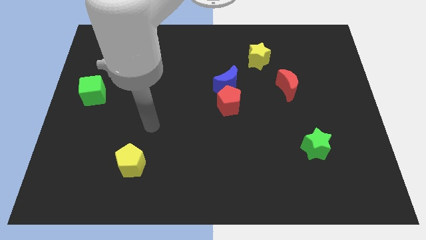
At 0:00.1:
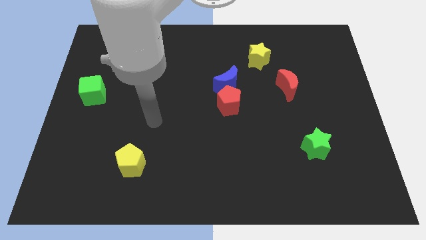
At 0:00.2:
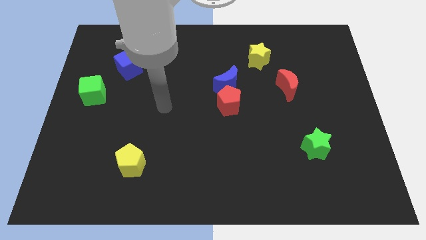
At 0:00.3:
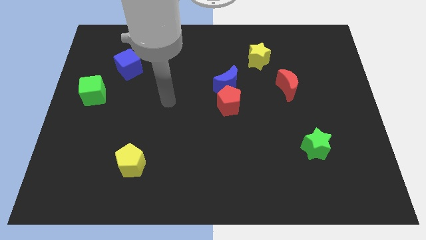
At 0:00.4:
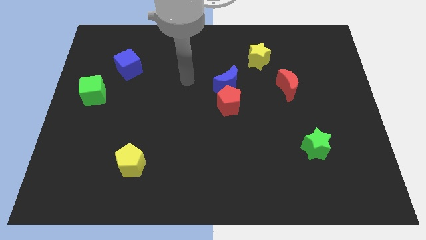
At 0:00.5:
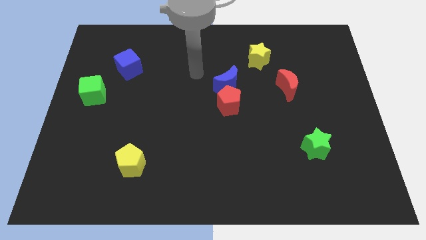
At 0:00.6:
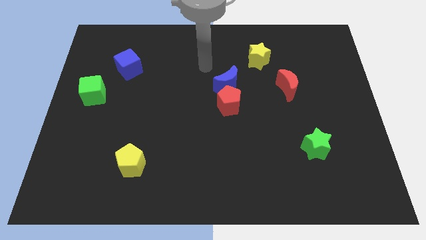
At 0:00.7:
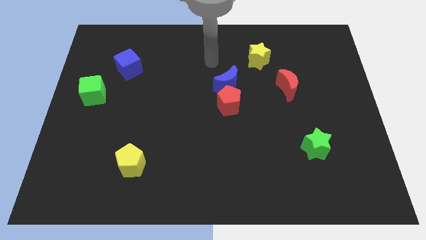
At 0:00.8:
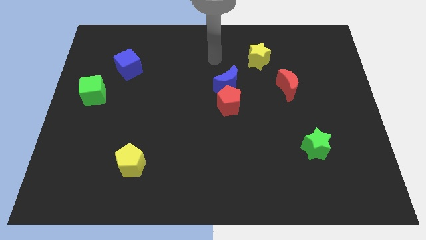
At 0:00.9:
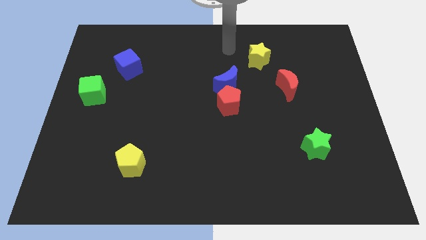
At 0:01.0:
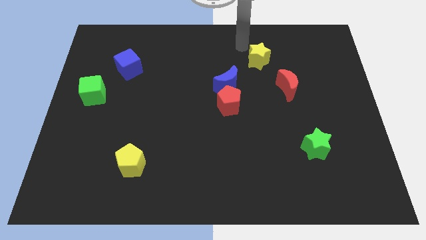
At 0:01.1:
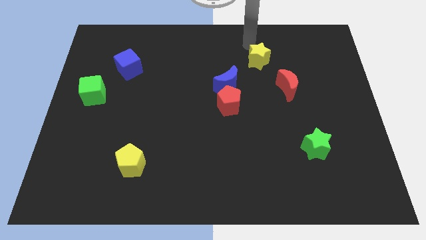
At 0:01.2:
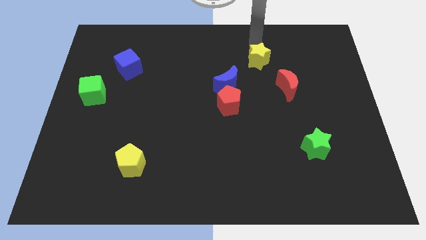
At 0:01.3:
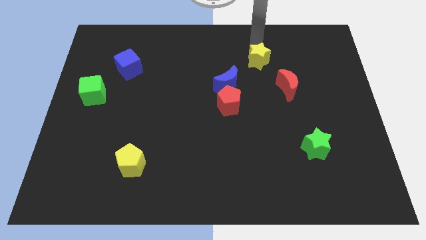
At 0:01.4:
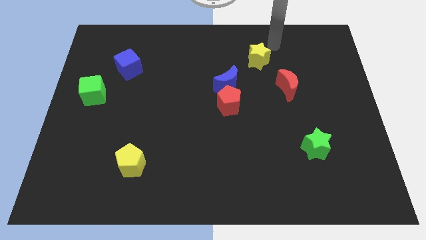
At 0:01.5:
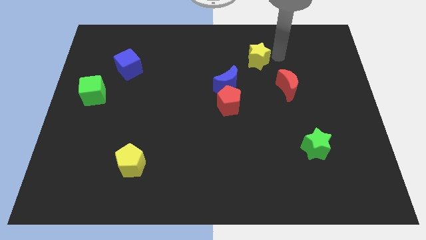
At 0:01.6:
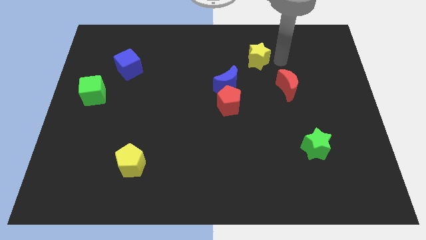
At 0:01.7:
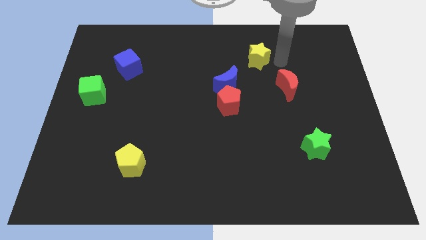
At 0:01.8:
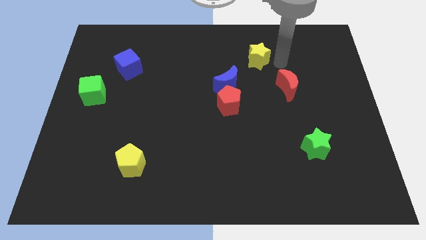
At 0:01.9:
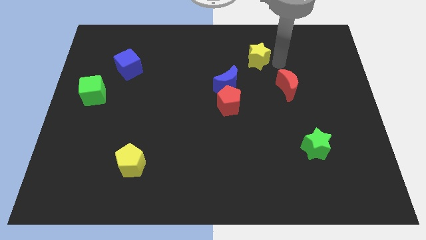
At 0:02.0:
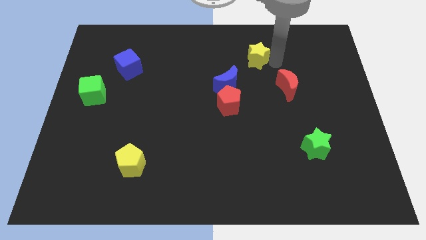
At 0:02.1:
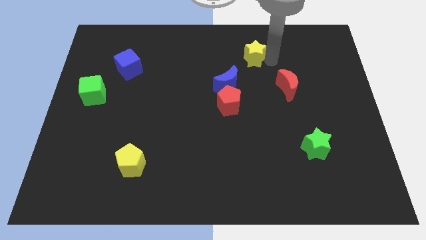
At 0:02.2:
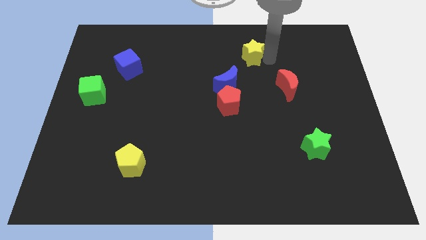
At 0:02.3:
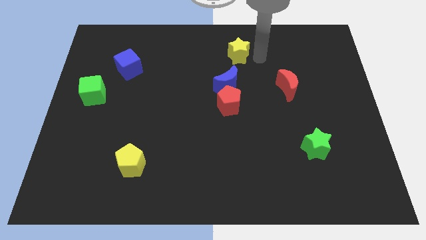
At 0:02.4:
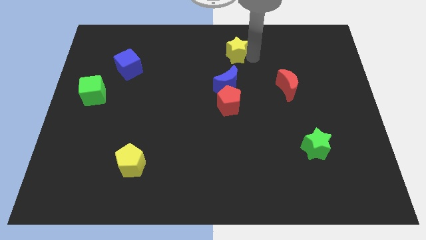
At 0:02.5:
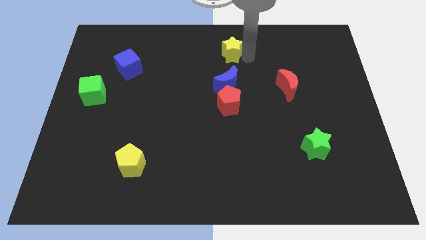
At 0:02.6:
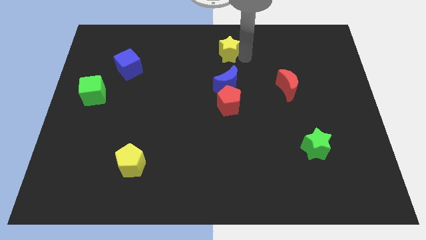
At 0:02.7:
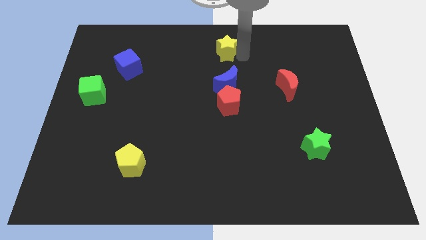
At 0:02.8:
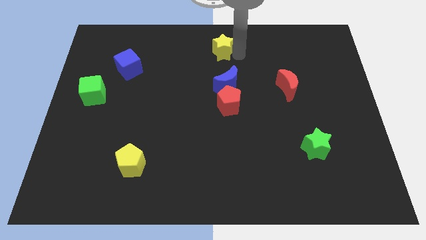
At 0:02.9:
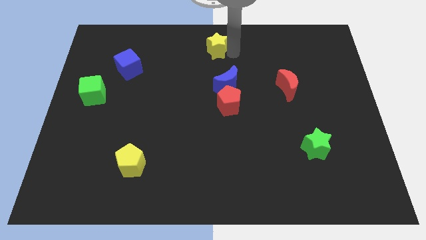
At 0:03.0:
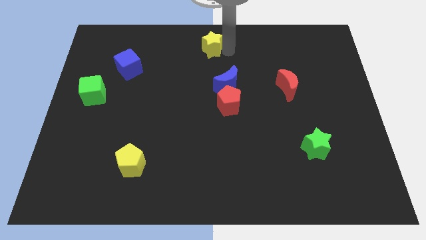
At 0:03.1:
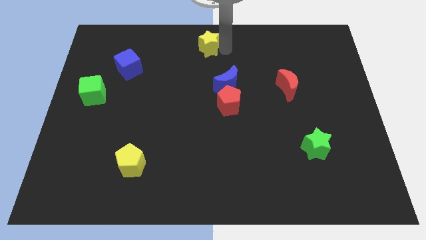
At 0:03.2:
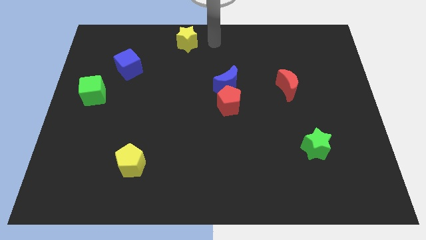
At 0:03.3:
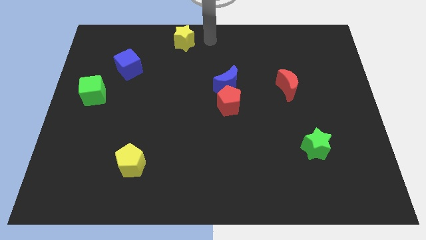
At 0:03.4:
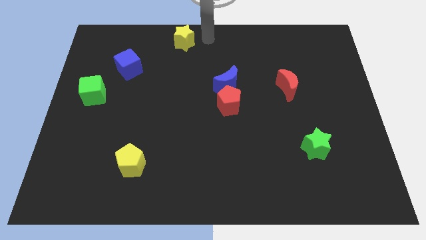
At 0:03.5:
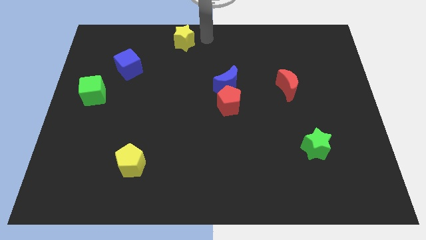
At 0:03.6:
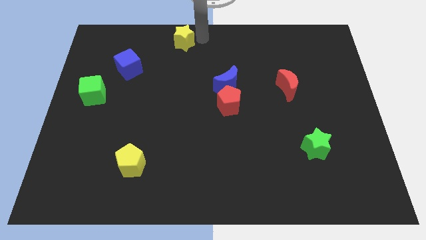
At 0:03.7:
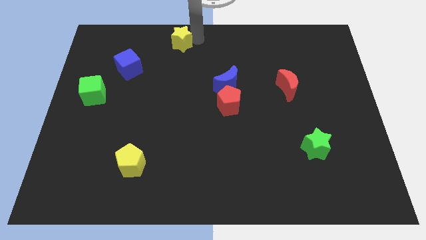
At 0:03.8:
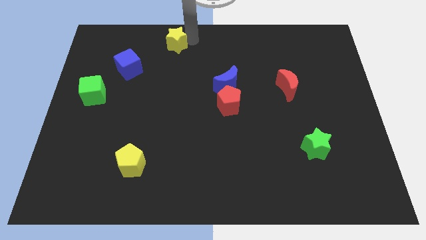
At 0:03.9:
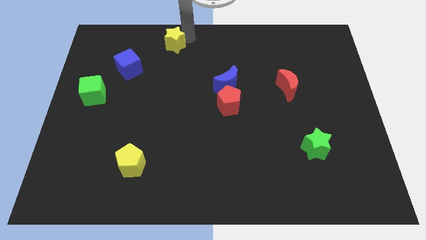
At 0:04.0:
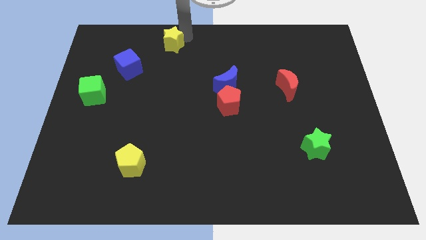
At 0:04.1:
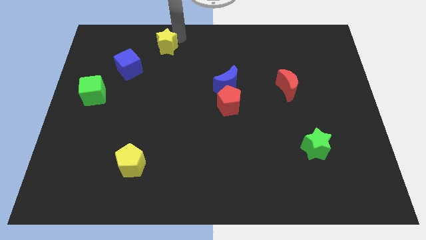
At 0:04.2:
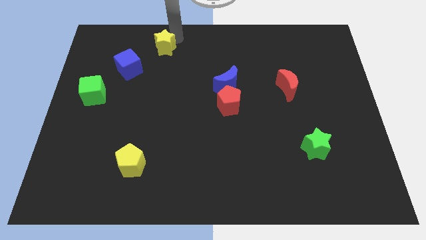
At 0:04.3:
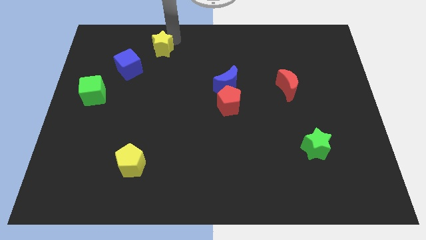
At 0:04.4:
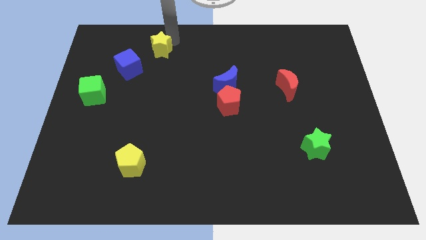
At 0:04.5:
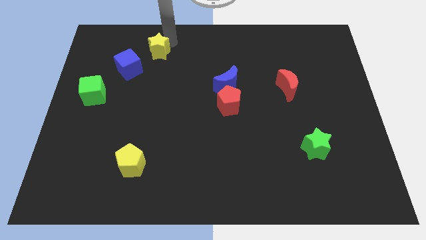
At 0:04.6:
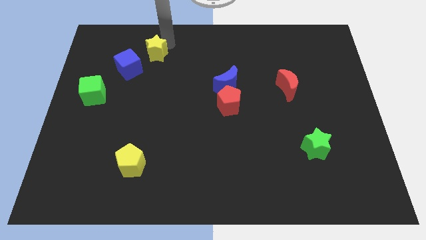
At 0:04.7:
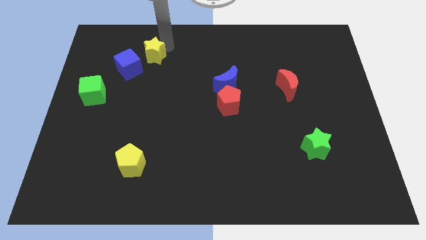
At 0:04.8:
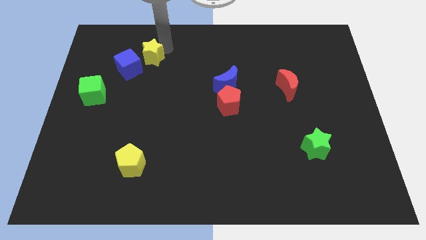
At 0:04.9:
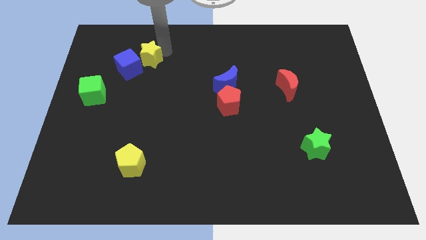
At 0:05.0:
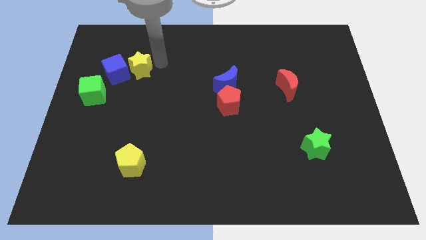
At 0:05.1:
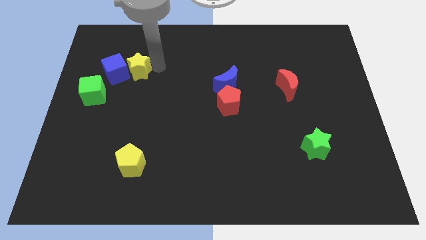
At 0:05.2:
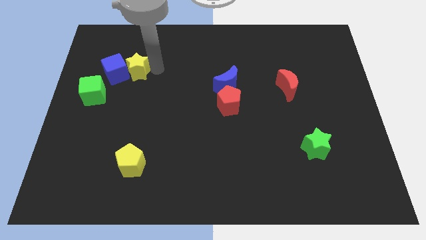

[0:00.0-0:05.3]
move the yellow star towards the blue cube

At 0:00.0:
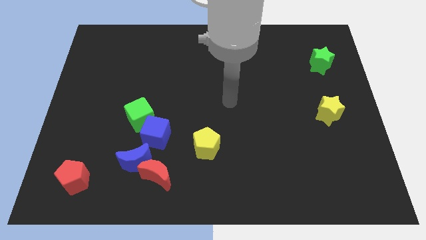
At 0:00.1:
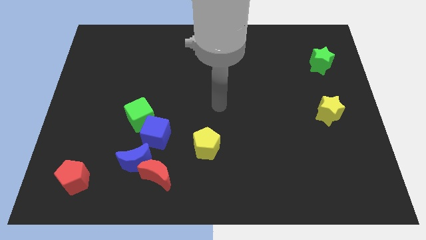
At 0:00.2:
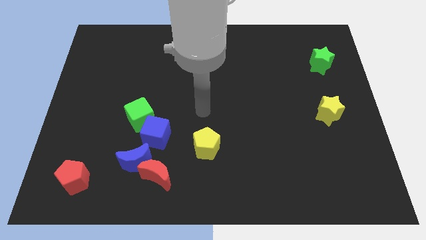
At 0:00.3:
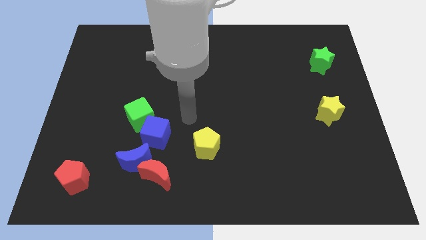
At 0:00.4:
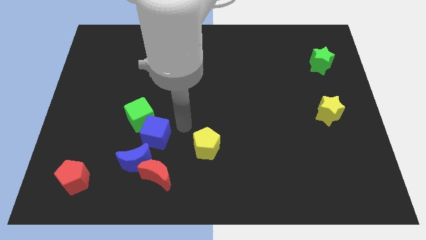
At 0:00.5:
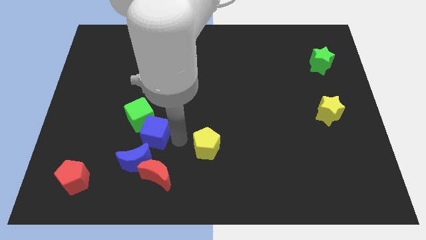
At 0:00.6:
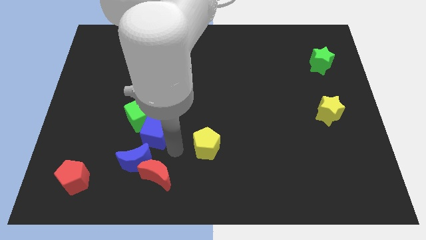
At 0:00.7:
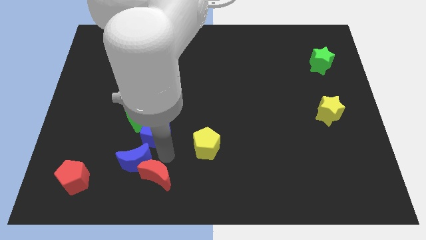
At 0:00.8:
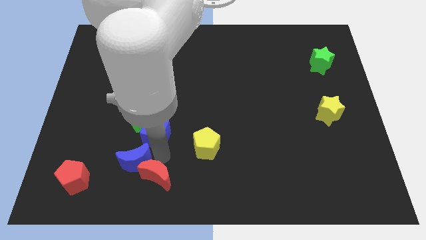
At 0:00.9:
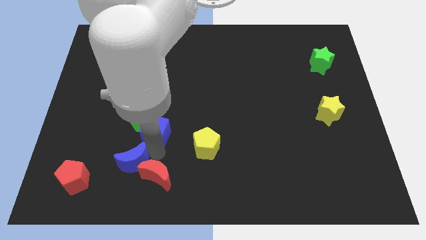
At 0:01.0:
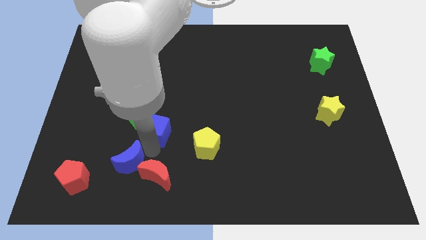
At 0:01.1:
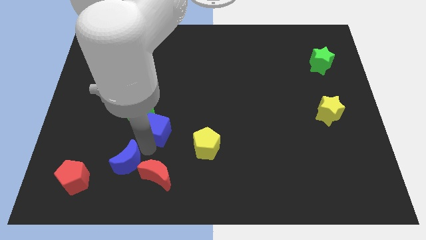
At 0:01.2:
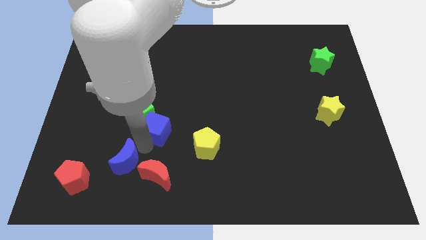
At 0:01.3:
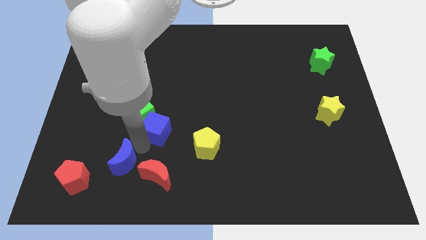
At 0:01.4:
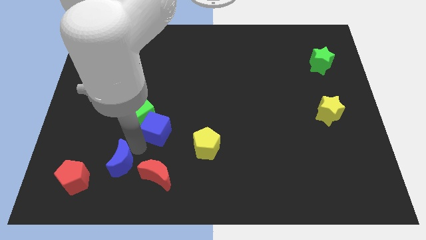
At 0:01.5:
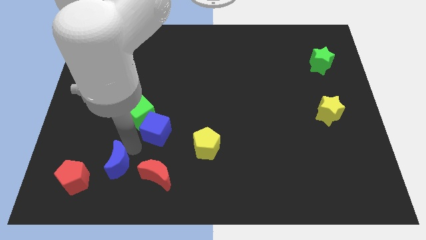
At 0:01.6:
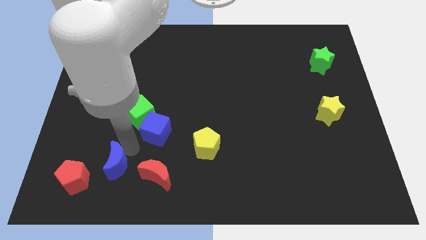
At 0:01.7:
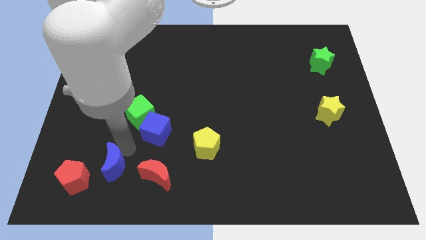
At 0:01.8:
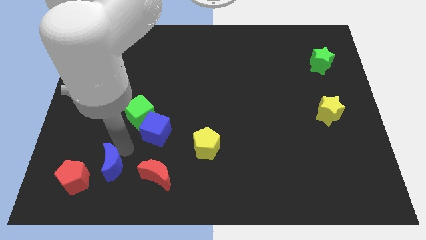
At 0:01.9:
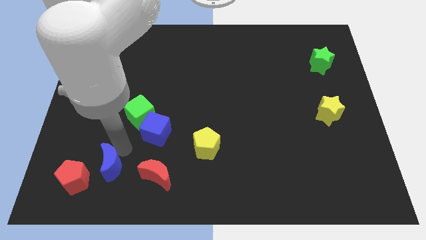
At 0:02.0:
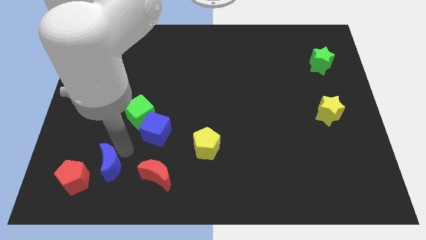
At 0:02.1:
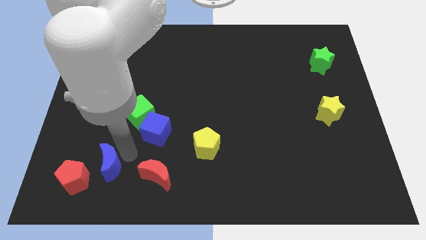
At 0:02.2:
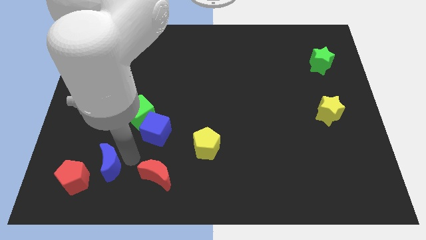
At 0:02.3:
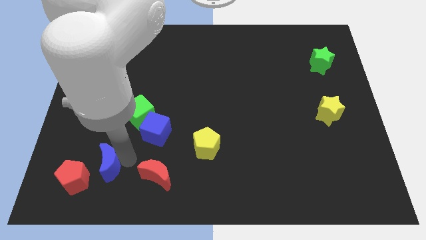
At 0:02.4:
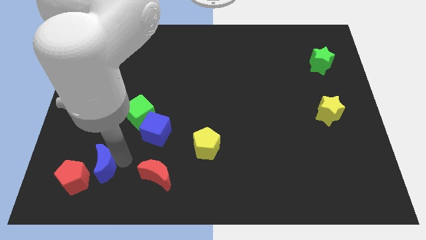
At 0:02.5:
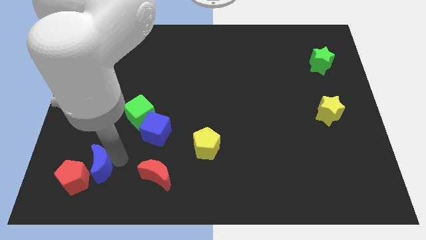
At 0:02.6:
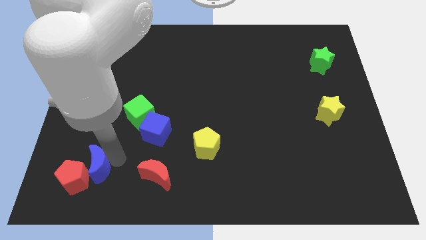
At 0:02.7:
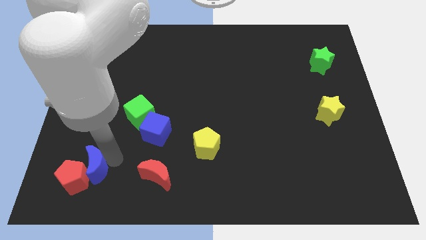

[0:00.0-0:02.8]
put the blue moon next to the red pentagon

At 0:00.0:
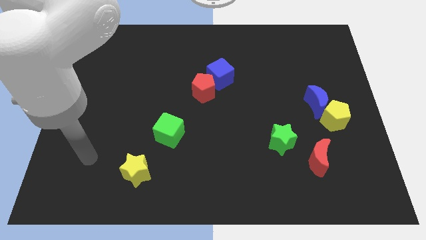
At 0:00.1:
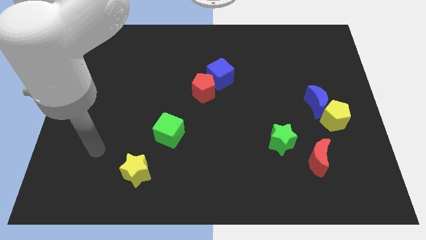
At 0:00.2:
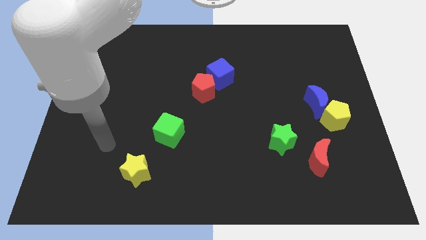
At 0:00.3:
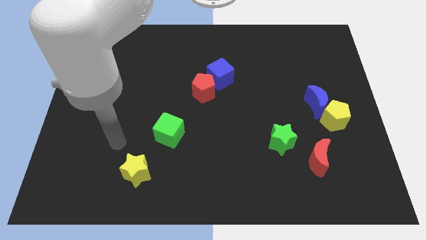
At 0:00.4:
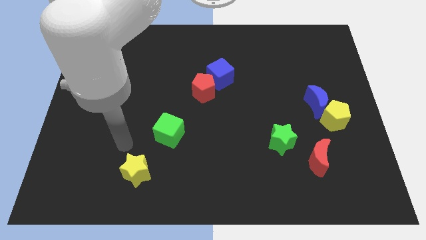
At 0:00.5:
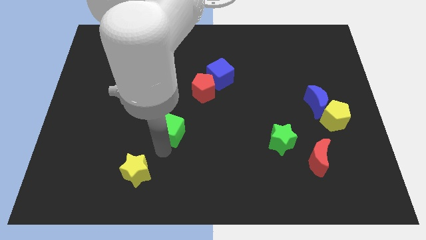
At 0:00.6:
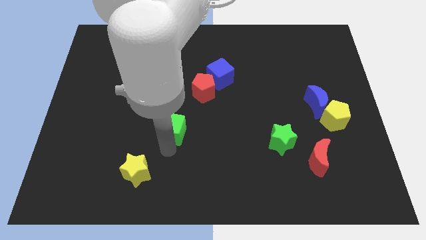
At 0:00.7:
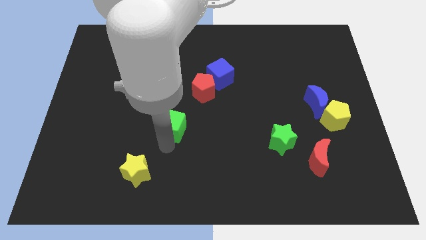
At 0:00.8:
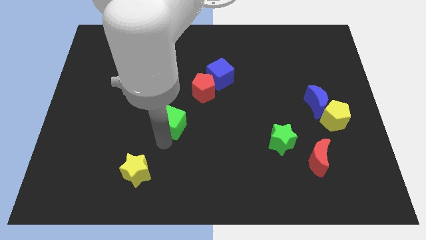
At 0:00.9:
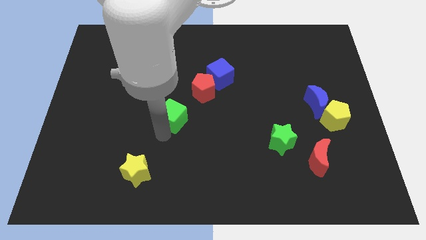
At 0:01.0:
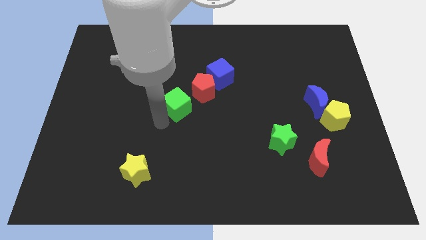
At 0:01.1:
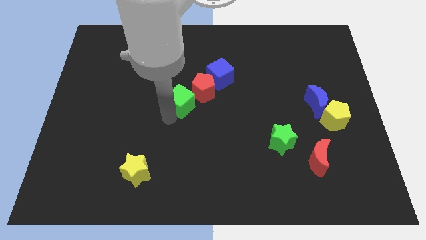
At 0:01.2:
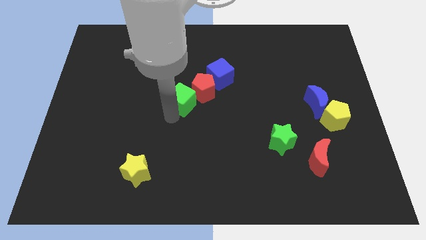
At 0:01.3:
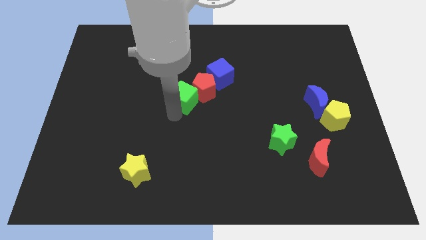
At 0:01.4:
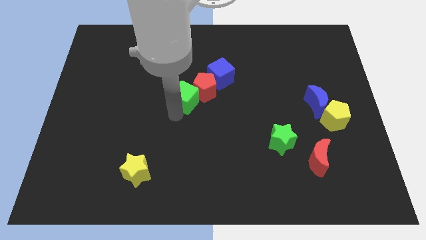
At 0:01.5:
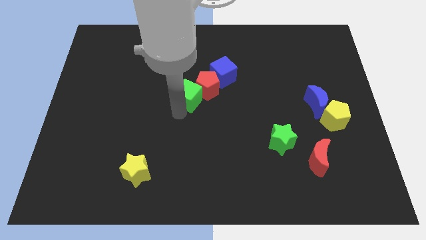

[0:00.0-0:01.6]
push the green cube towards the red pentagon
